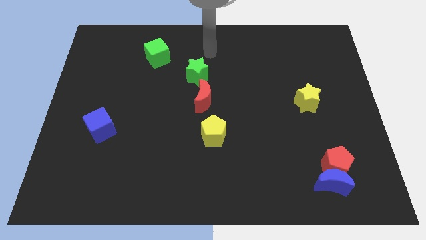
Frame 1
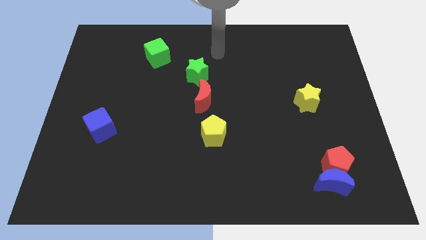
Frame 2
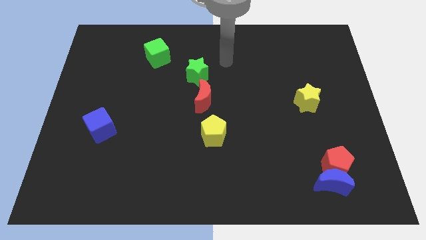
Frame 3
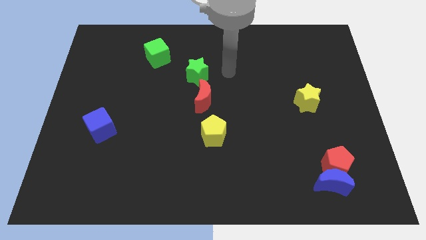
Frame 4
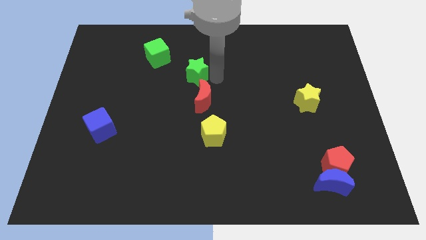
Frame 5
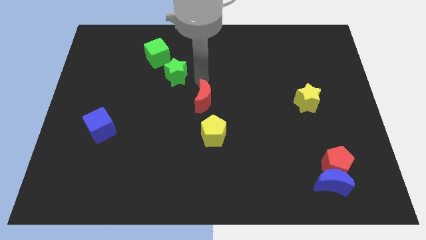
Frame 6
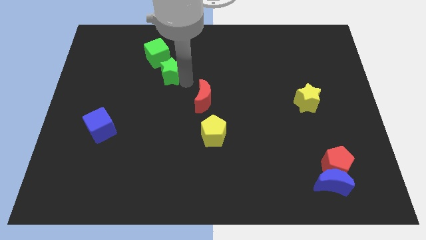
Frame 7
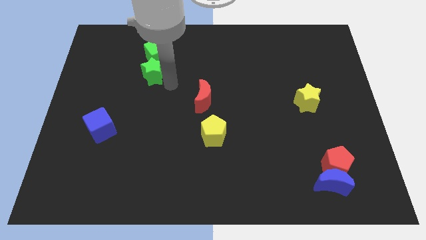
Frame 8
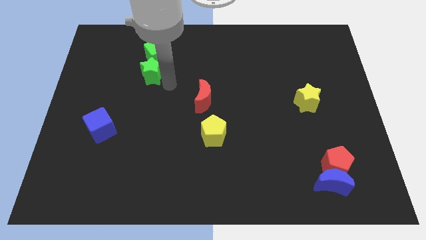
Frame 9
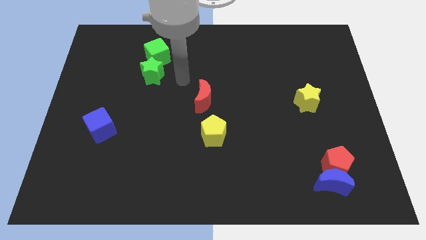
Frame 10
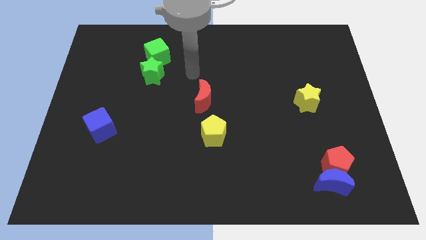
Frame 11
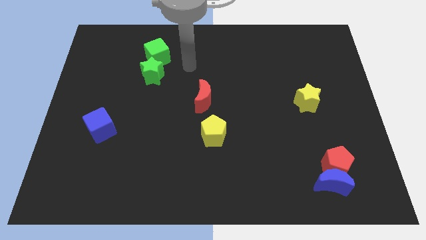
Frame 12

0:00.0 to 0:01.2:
move the green star below the green cube

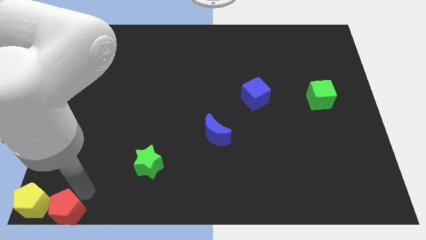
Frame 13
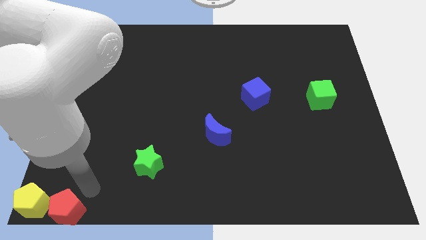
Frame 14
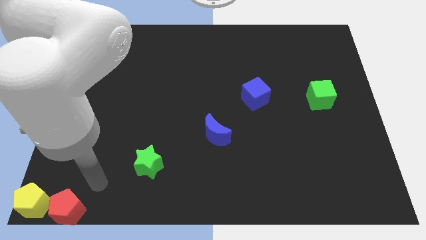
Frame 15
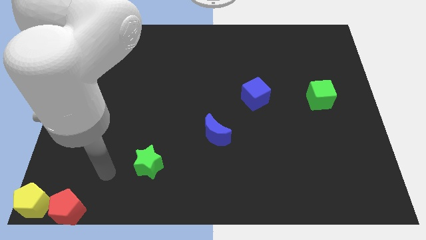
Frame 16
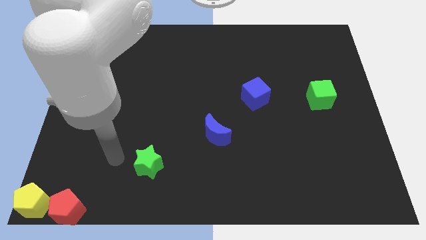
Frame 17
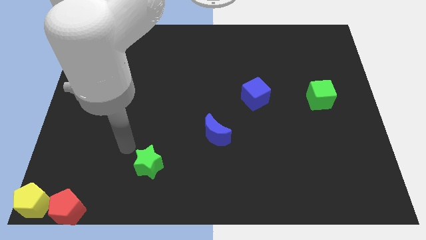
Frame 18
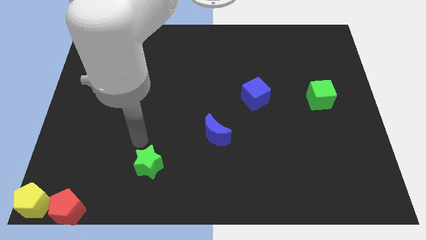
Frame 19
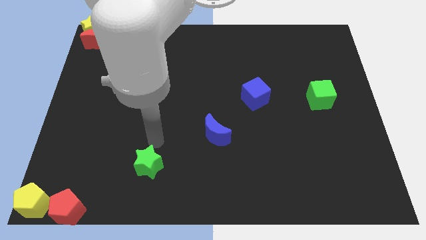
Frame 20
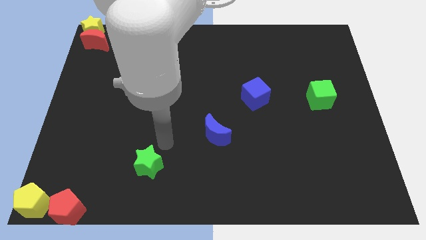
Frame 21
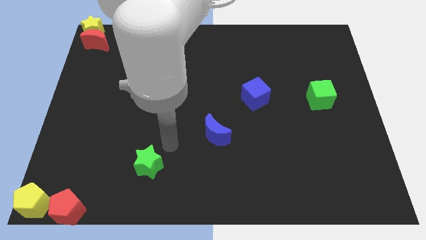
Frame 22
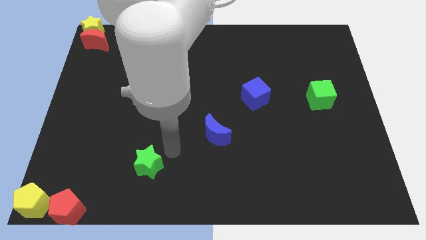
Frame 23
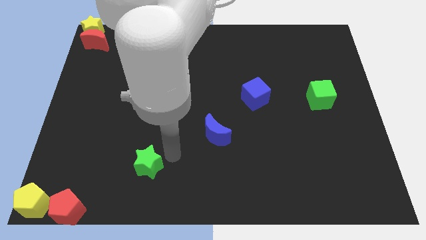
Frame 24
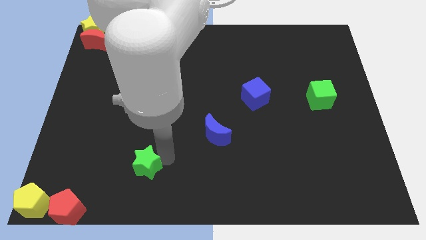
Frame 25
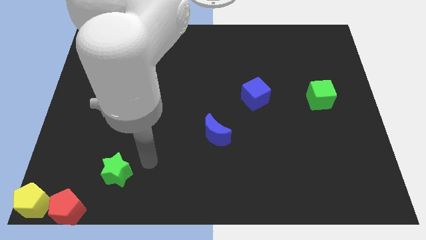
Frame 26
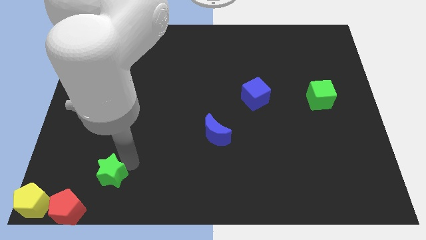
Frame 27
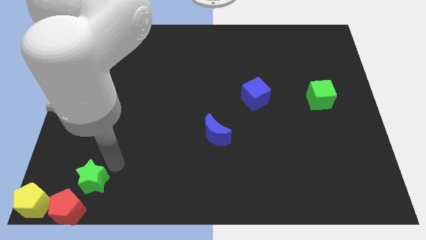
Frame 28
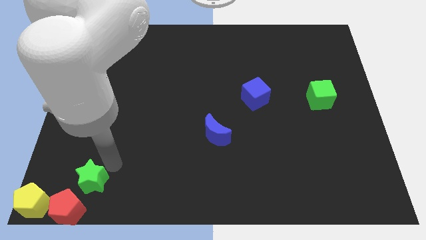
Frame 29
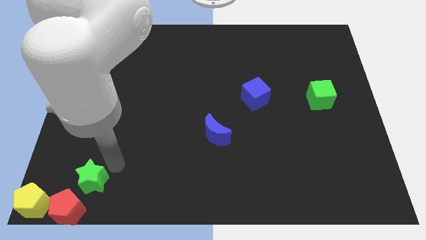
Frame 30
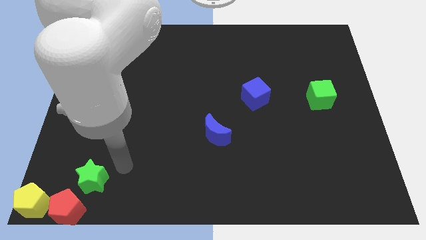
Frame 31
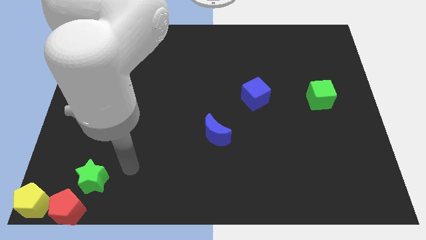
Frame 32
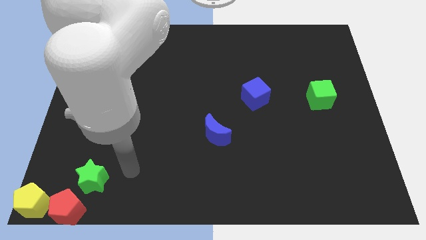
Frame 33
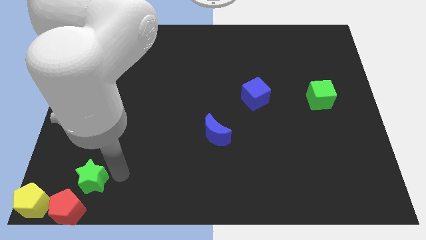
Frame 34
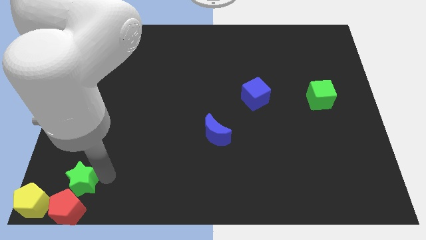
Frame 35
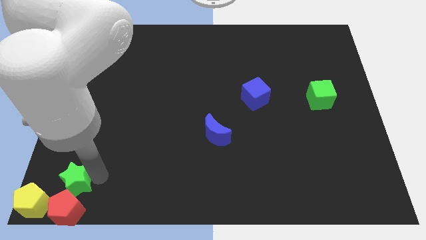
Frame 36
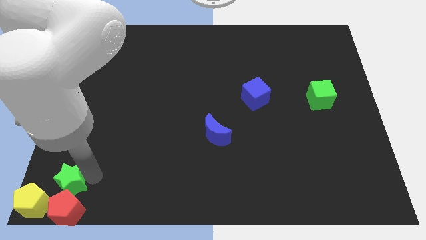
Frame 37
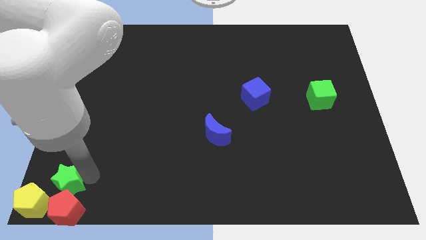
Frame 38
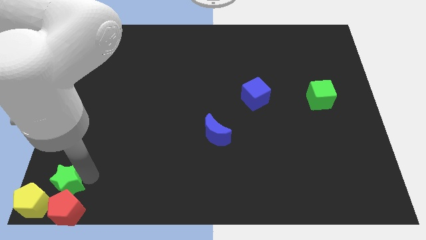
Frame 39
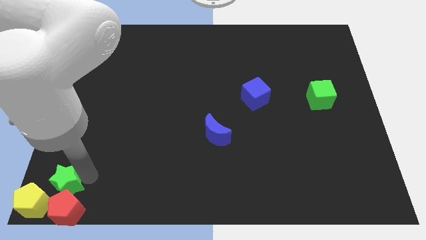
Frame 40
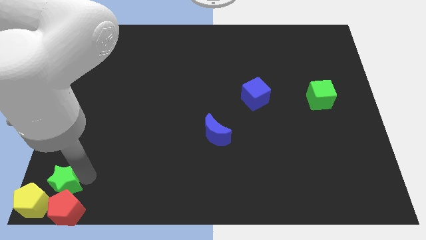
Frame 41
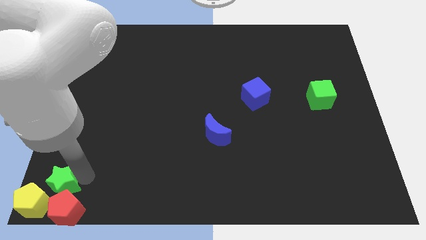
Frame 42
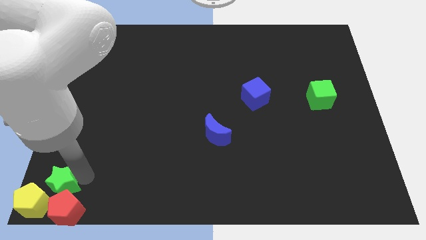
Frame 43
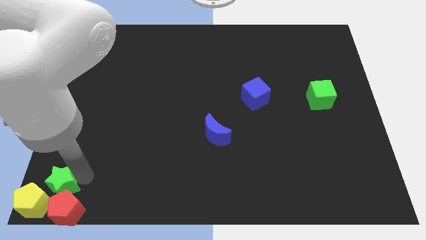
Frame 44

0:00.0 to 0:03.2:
put the green star at the top of red pentagon

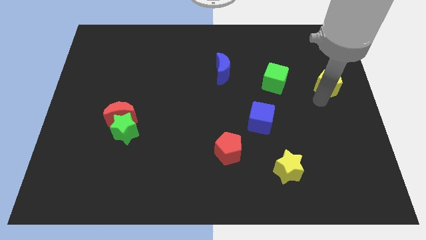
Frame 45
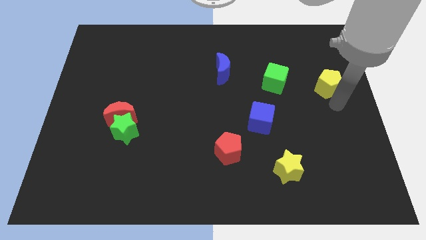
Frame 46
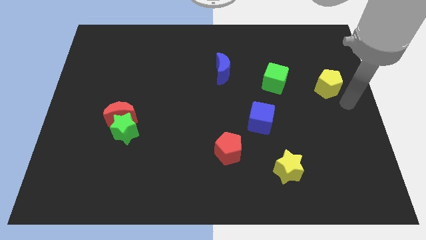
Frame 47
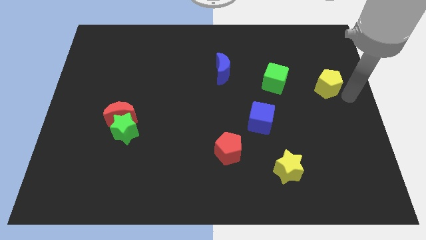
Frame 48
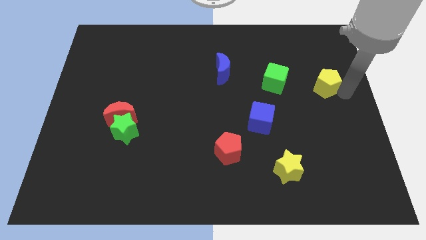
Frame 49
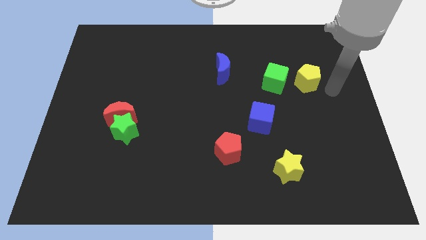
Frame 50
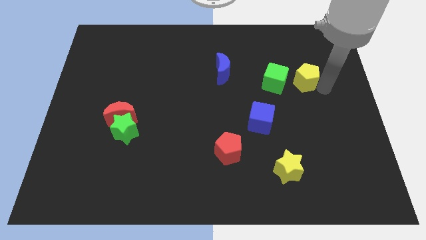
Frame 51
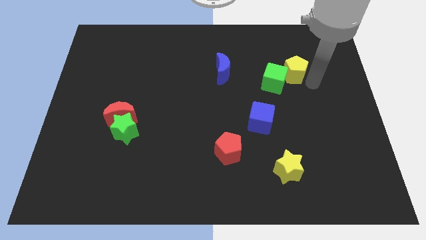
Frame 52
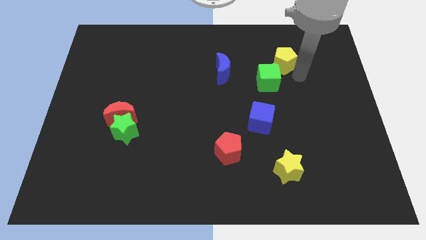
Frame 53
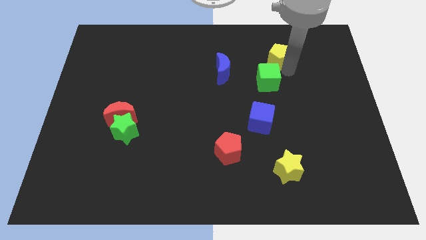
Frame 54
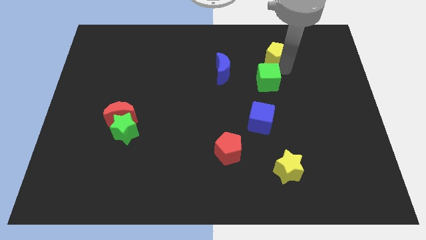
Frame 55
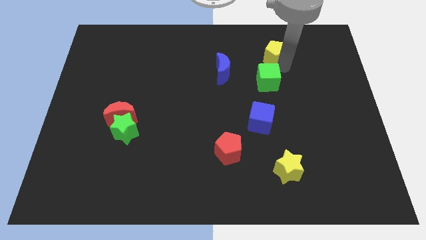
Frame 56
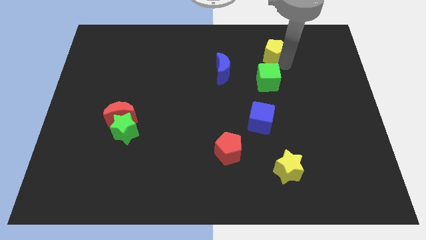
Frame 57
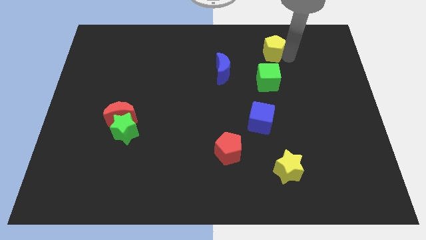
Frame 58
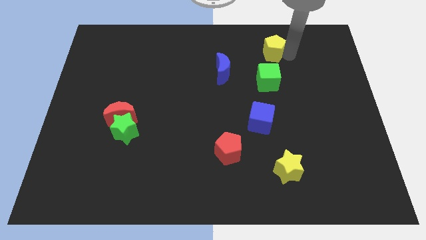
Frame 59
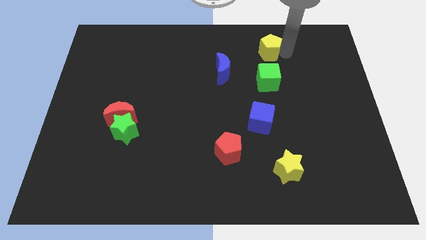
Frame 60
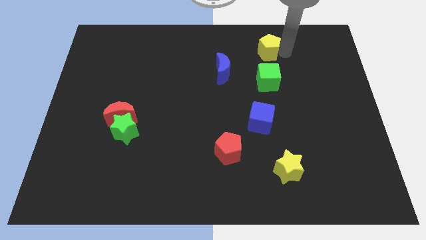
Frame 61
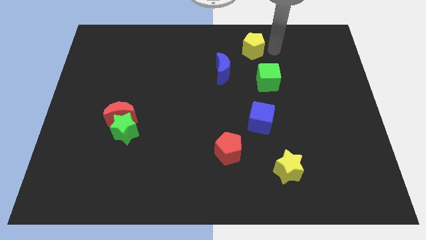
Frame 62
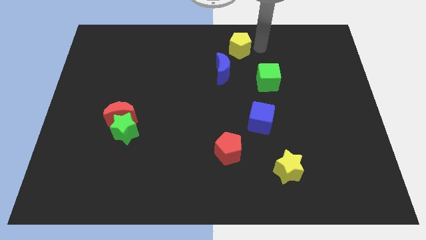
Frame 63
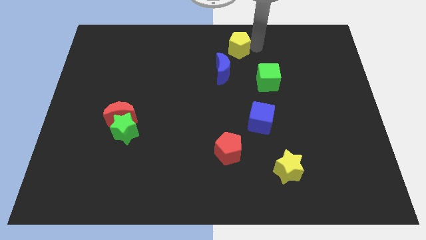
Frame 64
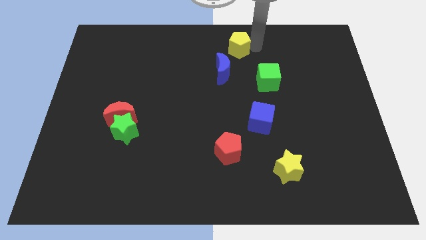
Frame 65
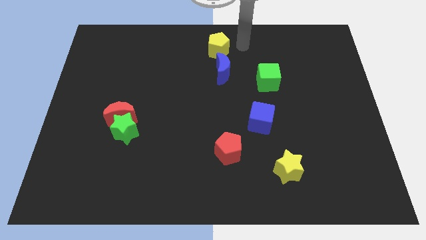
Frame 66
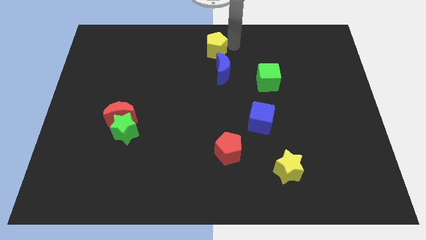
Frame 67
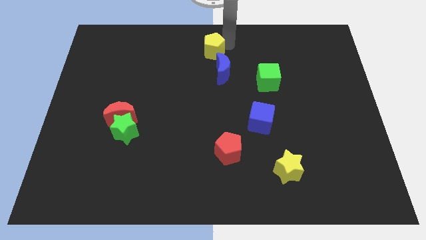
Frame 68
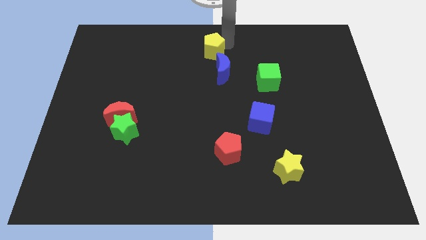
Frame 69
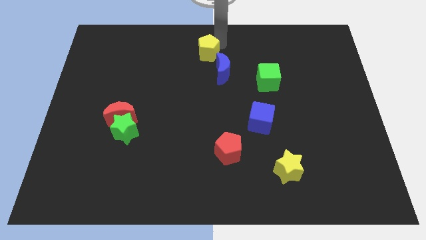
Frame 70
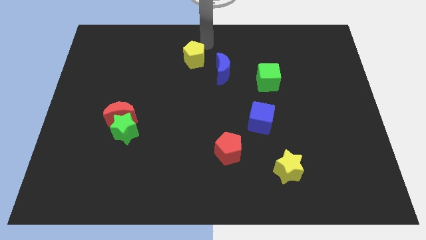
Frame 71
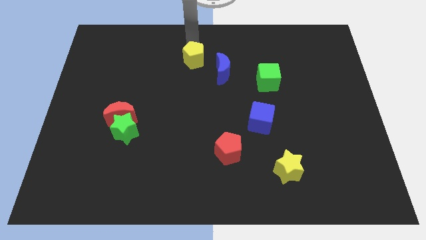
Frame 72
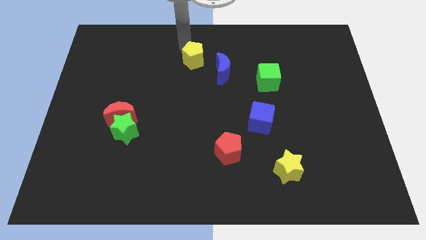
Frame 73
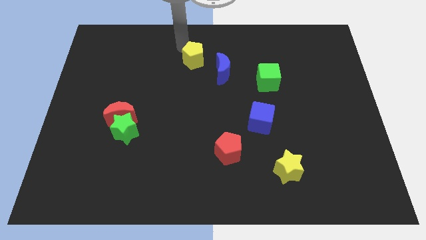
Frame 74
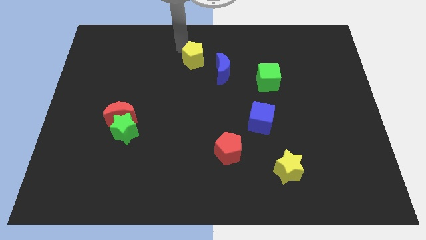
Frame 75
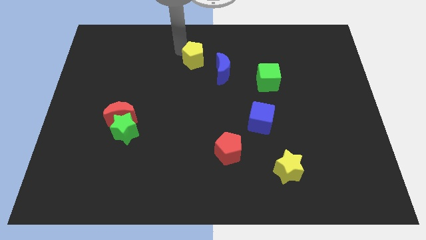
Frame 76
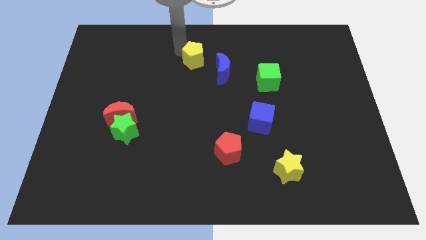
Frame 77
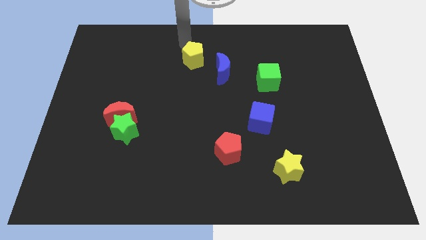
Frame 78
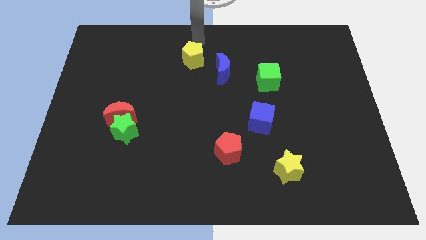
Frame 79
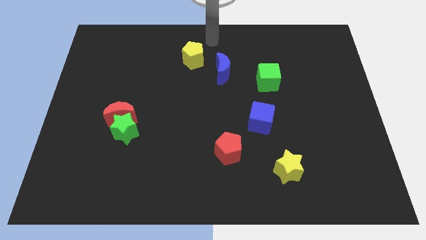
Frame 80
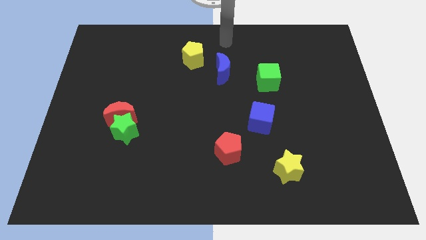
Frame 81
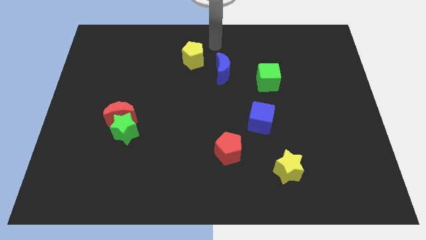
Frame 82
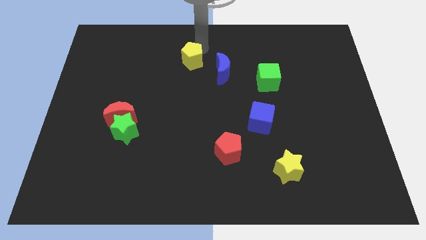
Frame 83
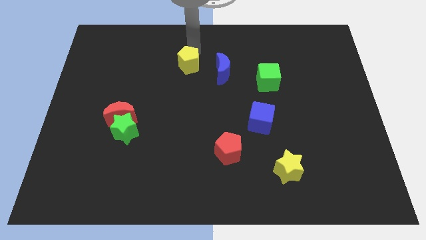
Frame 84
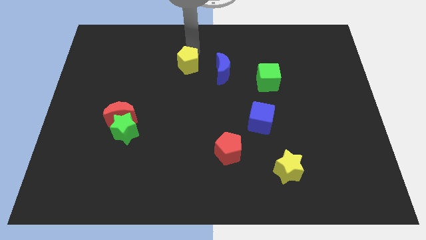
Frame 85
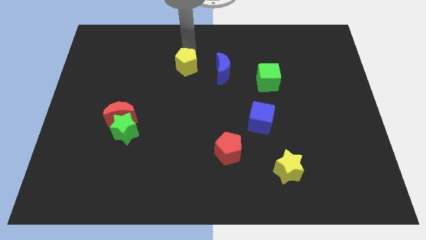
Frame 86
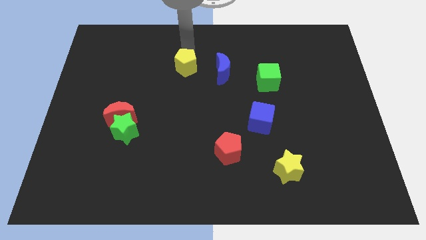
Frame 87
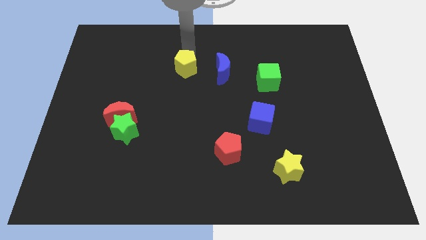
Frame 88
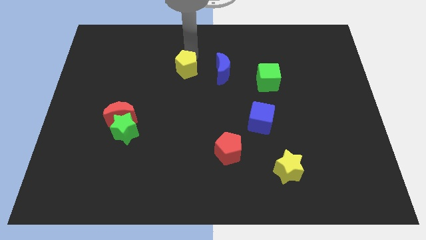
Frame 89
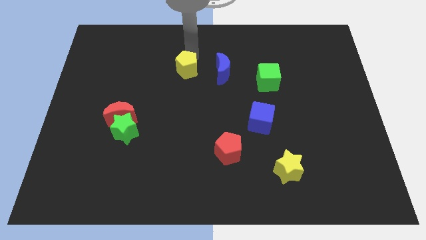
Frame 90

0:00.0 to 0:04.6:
place the yellow pentagon left to the blue moon

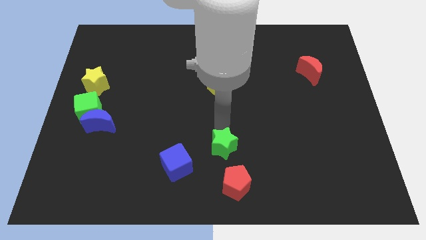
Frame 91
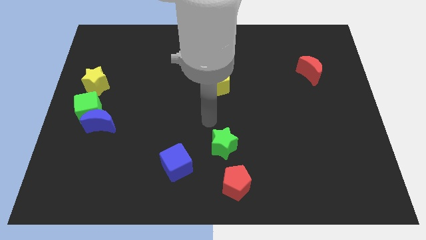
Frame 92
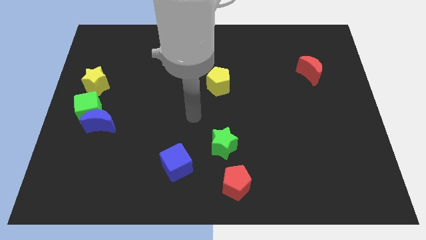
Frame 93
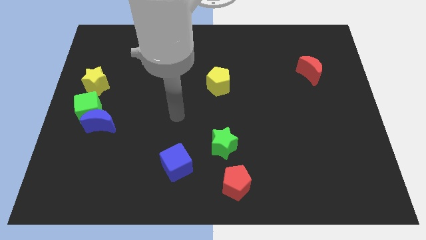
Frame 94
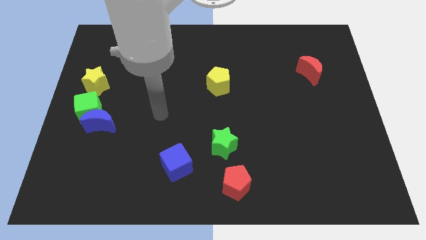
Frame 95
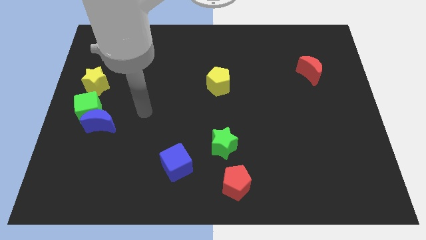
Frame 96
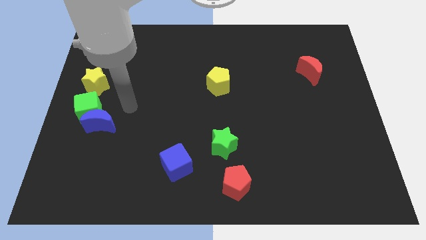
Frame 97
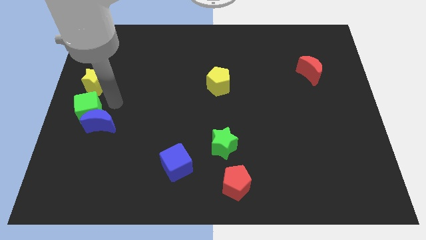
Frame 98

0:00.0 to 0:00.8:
take your hand close to the right side of the green cube
